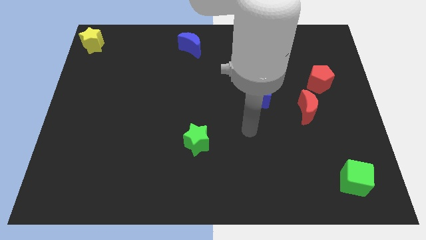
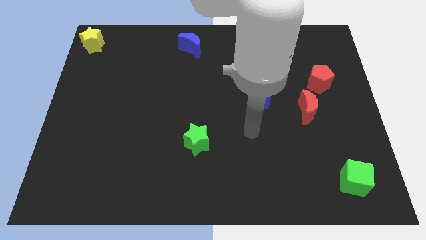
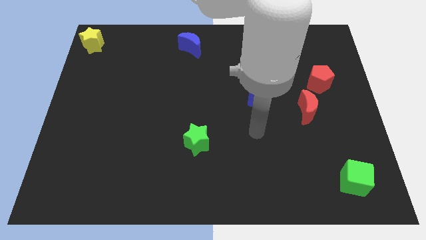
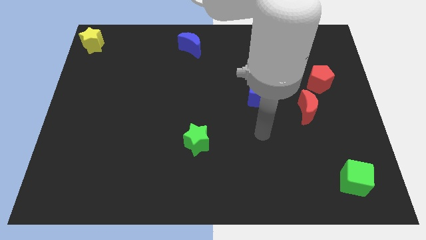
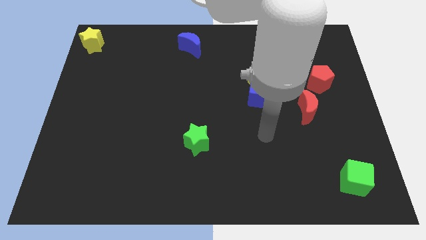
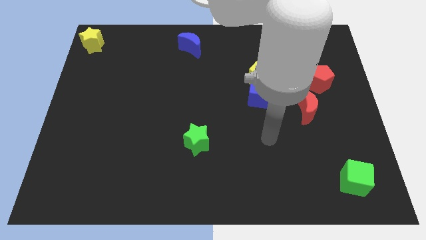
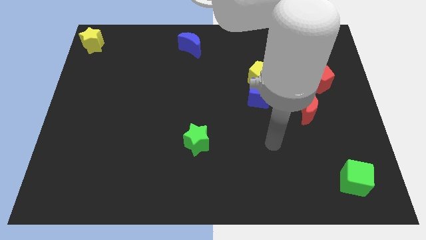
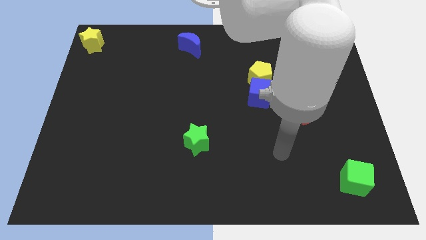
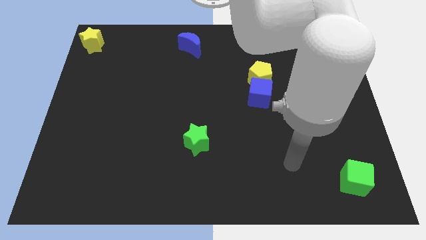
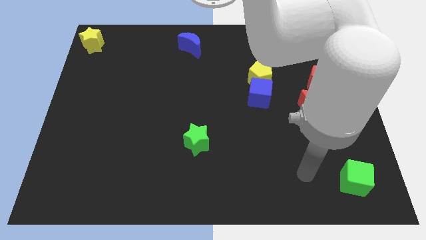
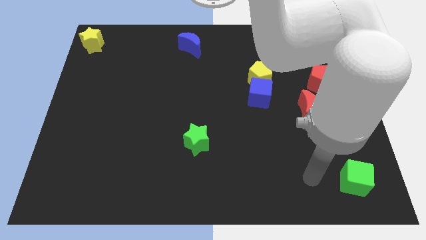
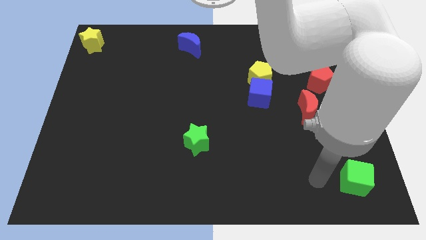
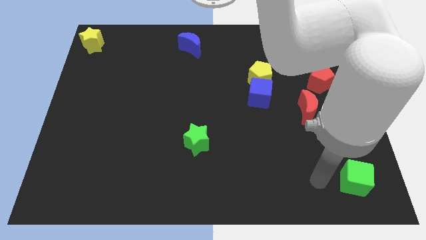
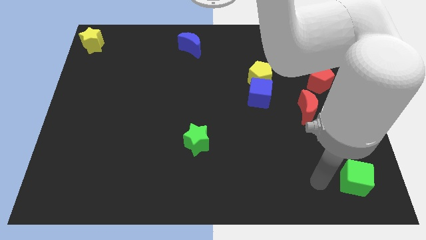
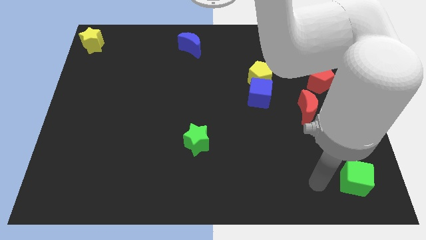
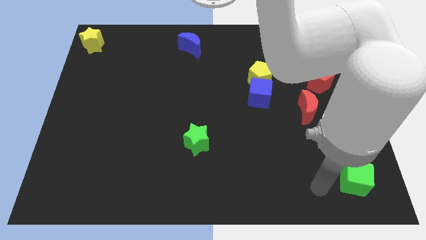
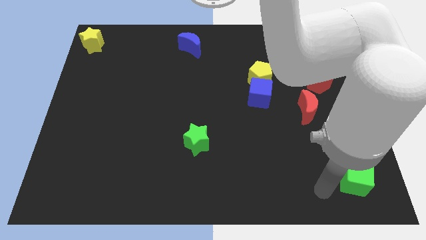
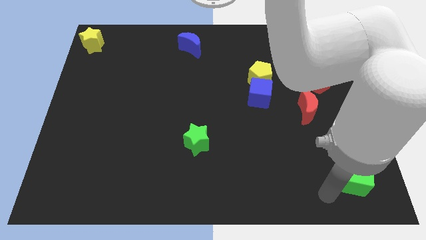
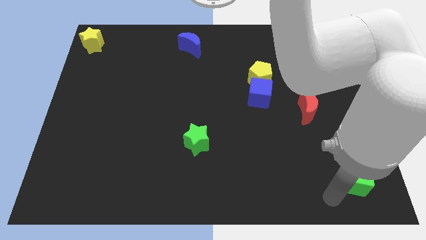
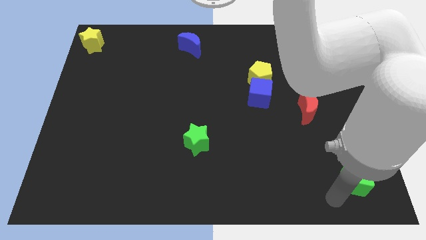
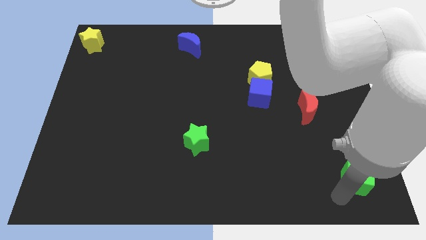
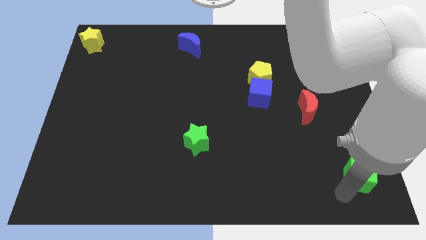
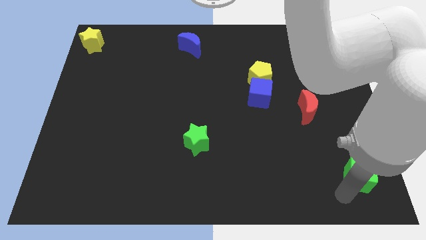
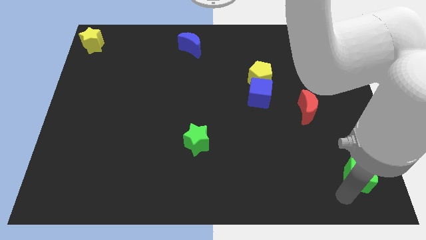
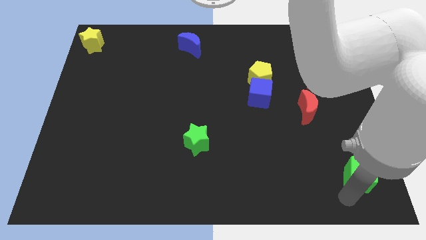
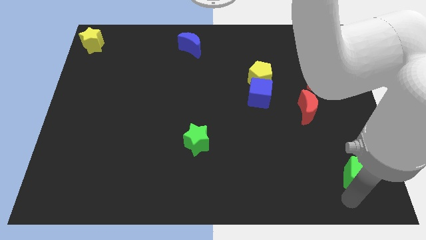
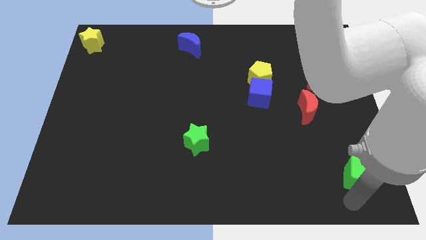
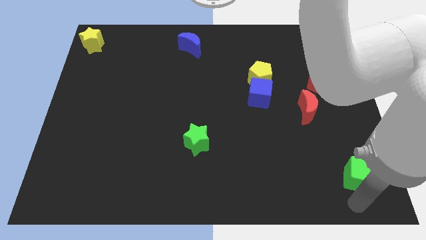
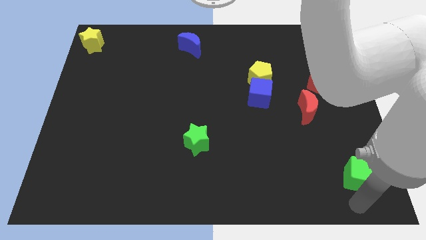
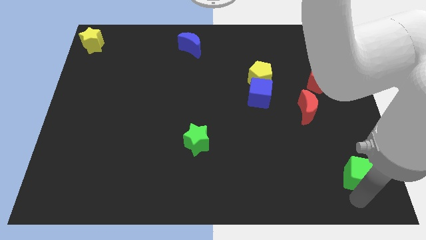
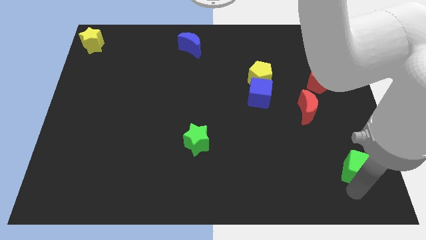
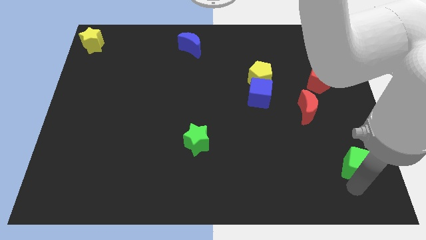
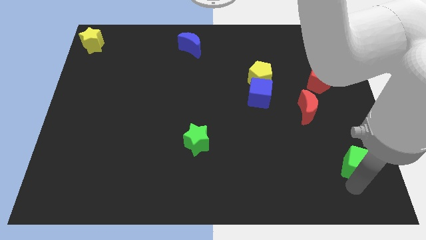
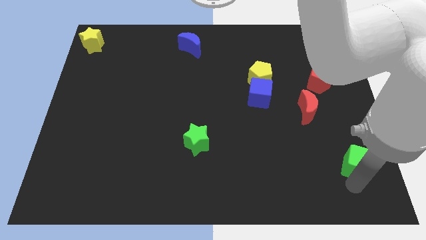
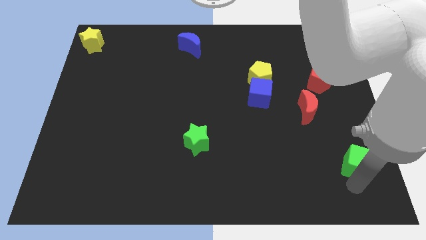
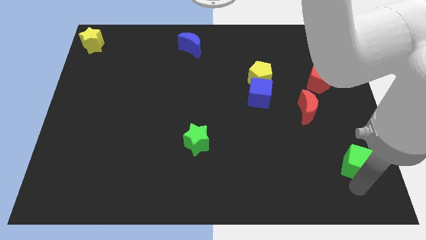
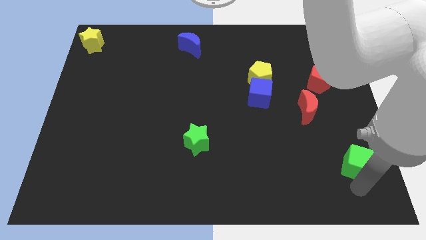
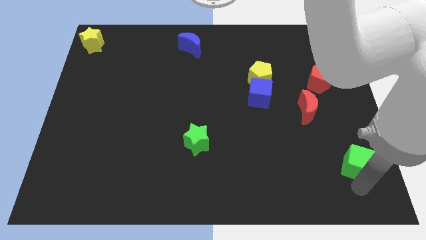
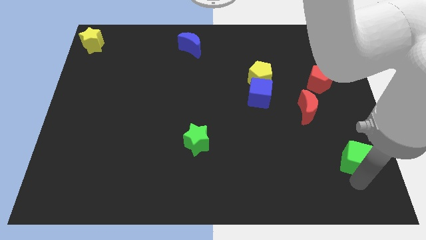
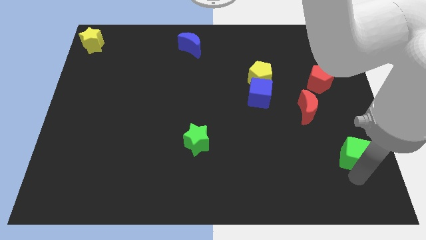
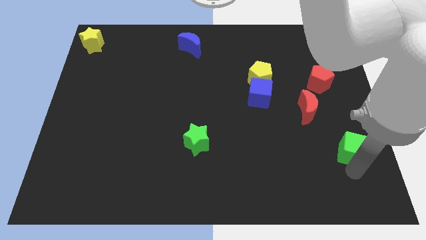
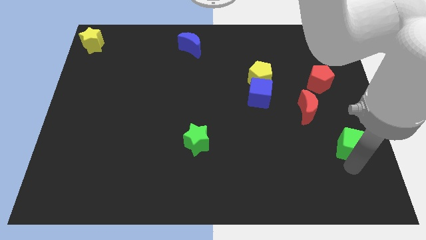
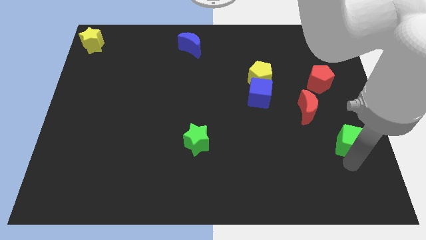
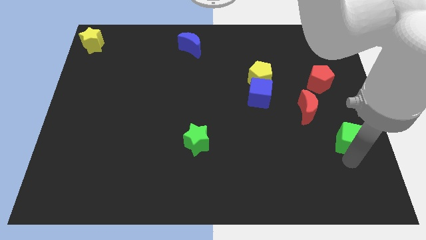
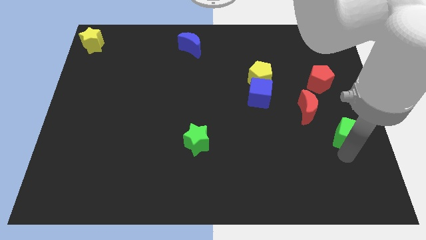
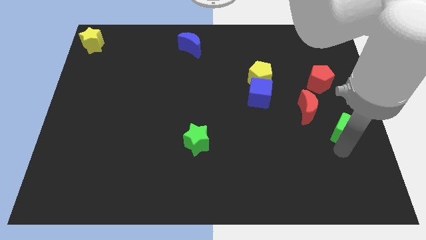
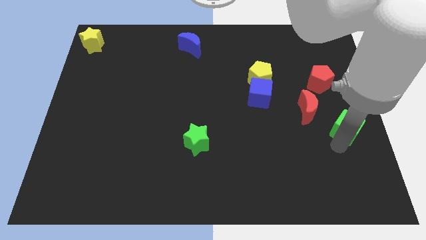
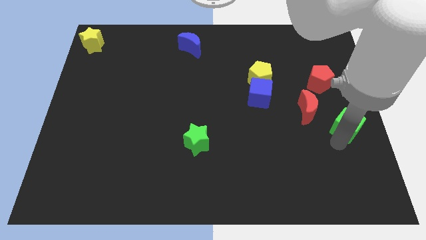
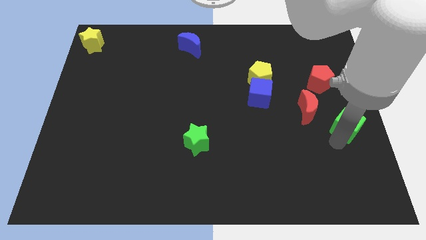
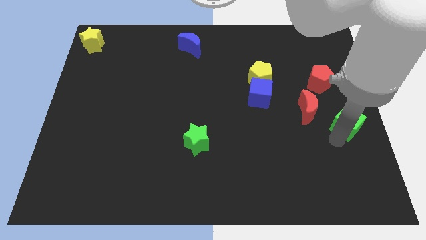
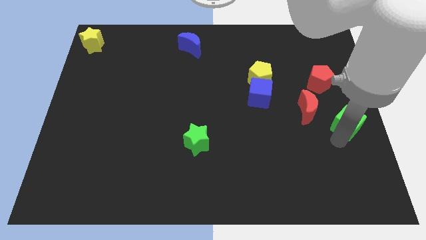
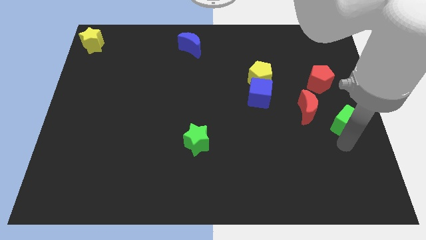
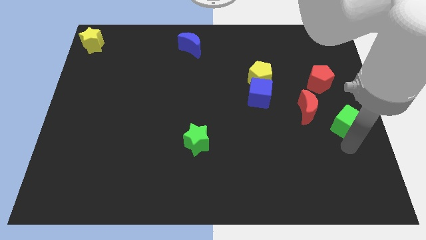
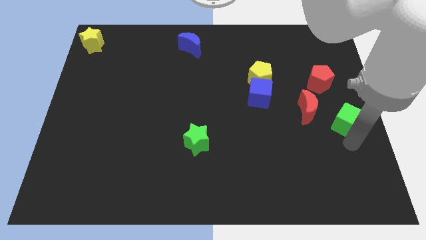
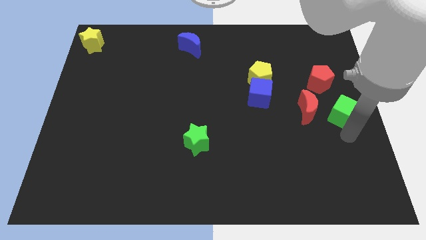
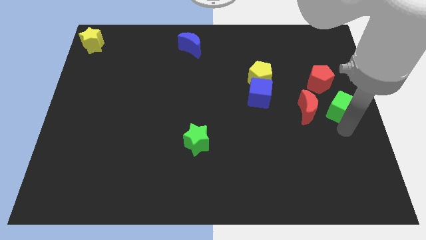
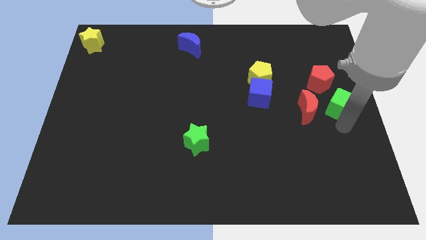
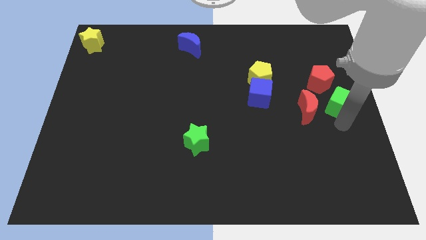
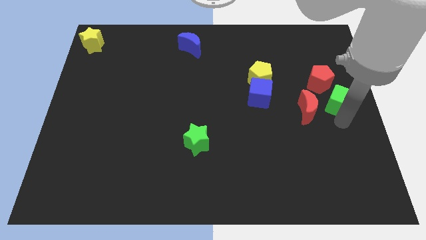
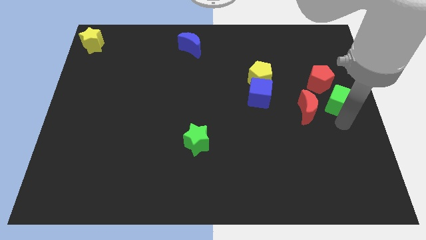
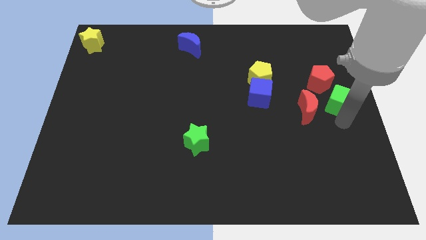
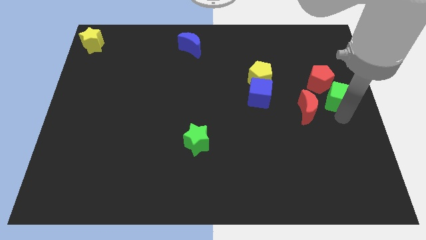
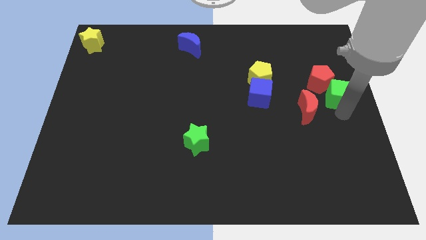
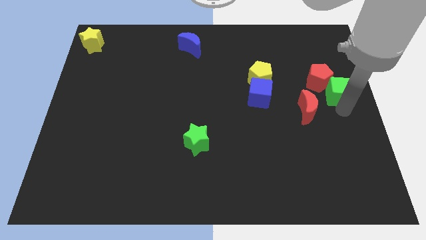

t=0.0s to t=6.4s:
push the green cube to the right of the red pentagon

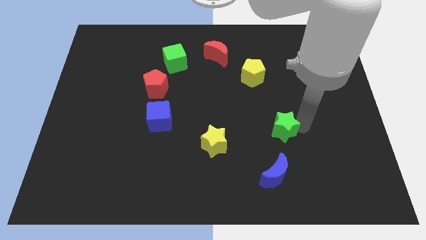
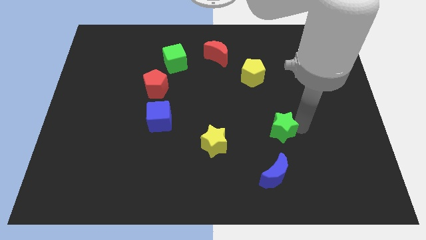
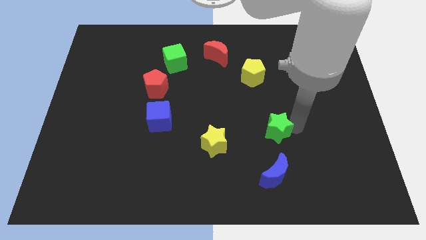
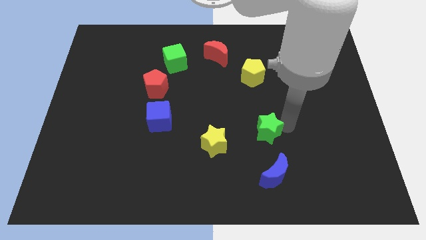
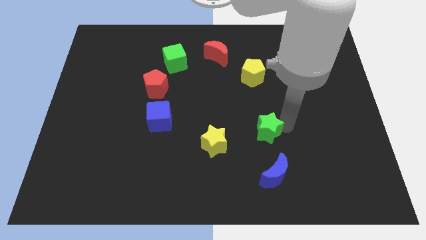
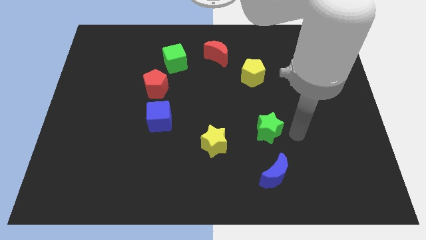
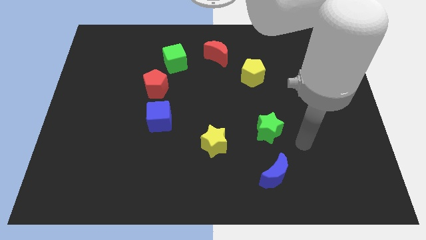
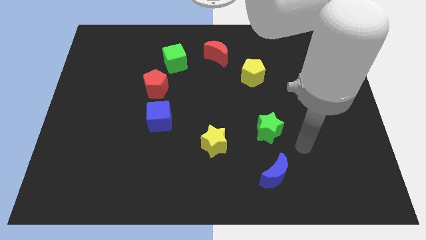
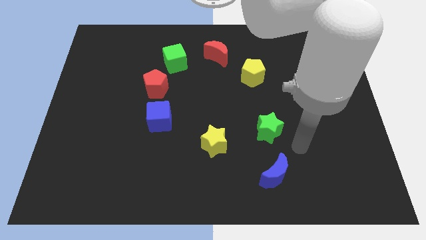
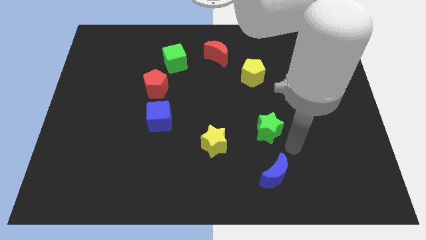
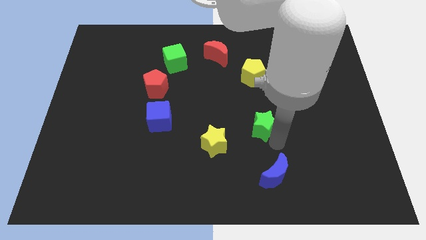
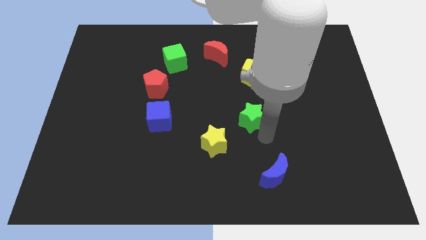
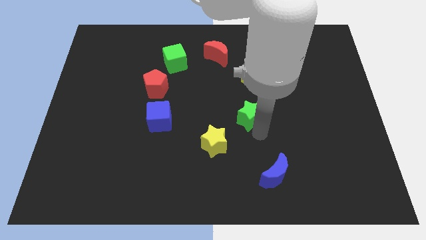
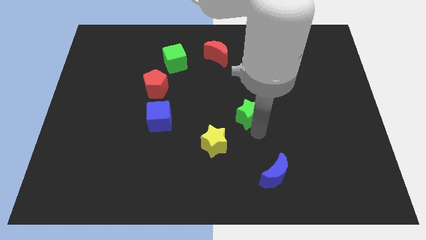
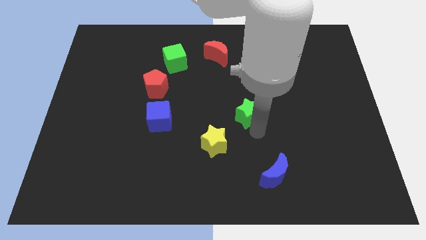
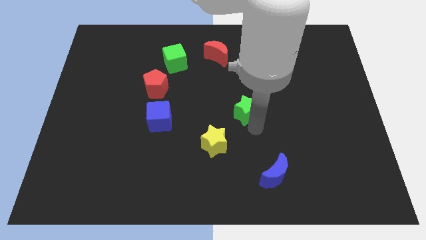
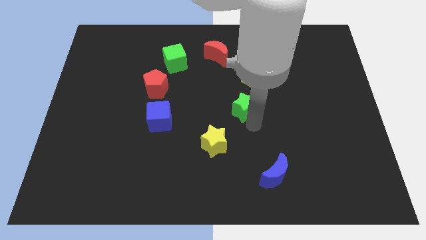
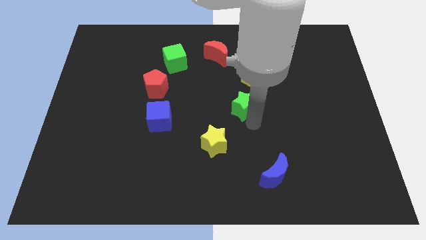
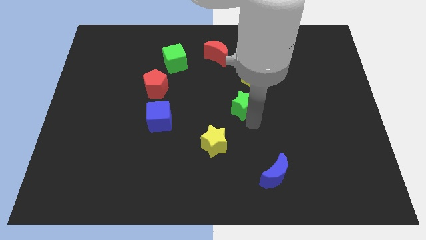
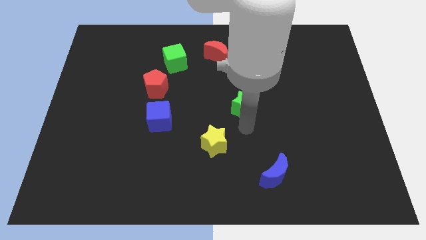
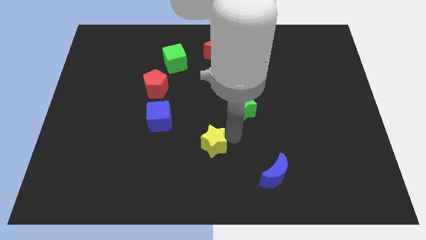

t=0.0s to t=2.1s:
push the yellow star towards bottom

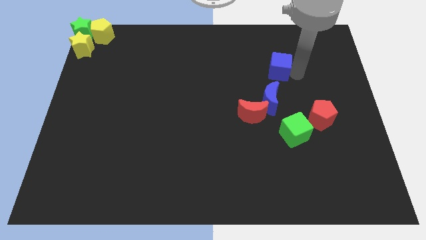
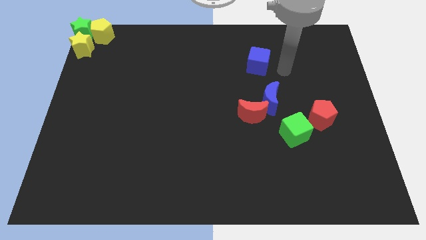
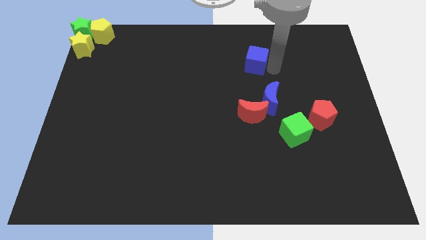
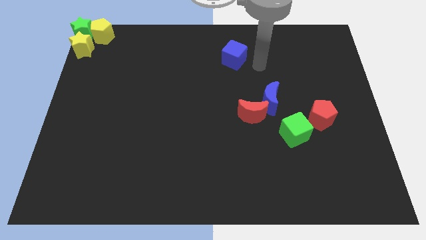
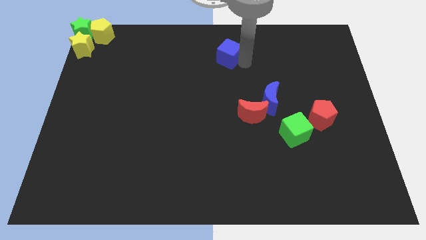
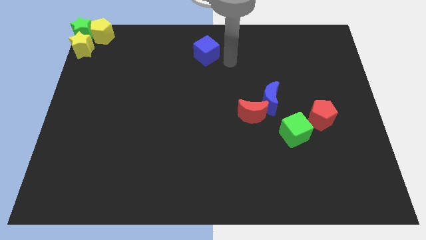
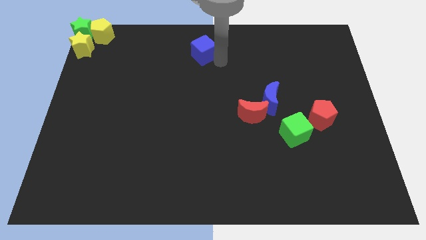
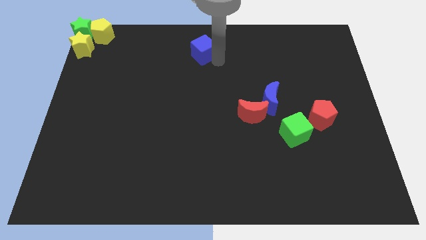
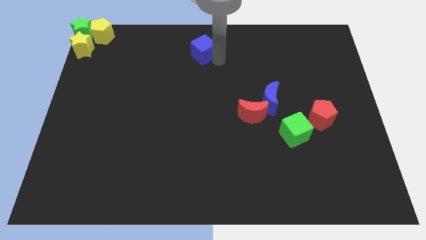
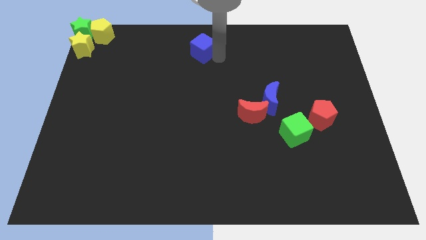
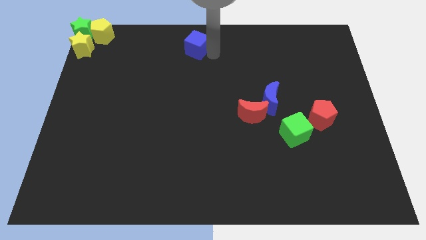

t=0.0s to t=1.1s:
slide blue cube towards top center
